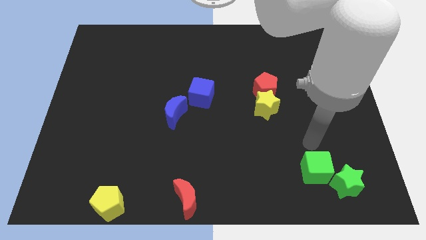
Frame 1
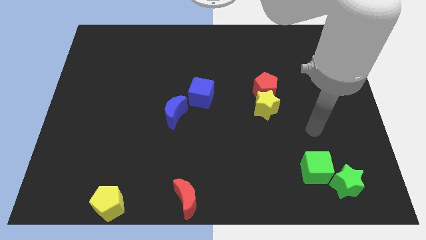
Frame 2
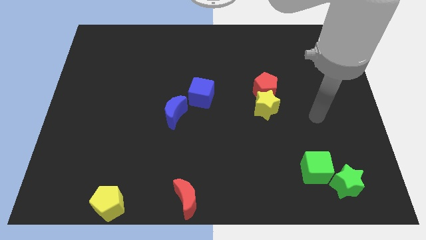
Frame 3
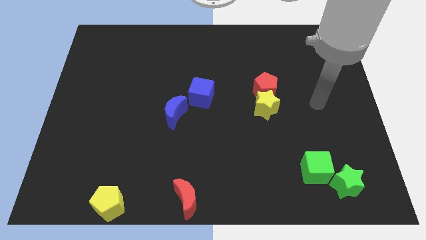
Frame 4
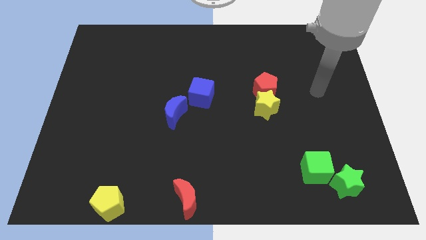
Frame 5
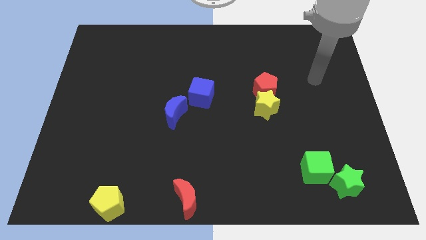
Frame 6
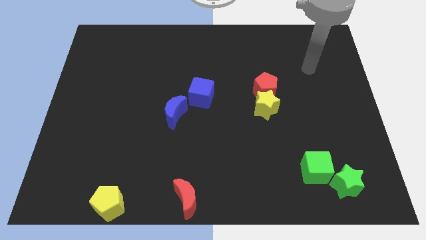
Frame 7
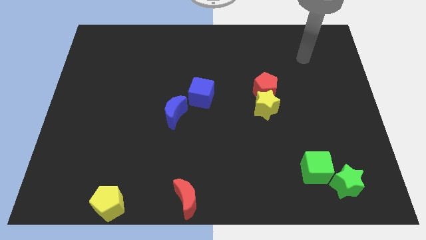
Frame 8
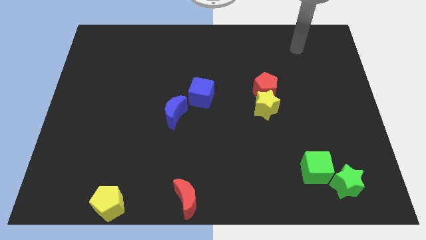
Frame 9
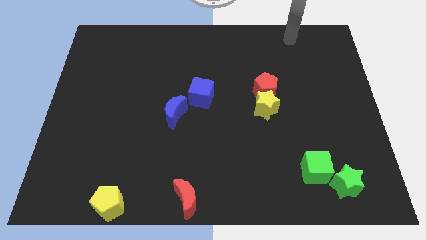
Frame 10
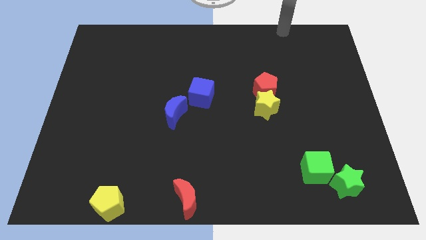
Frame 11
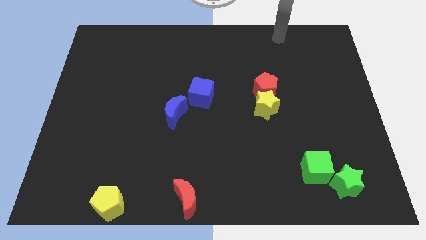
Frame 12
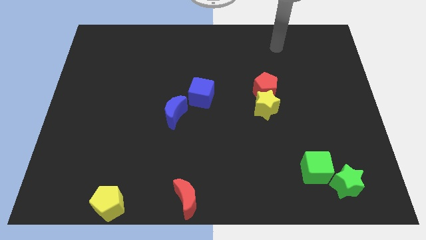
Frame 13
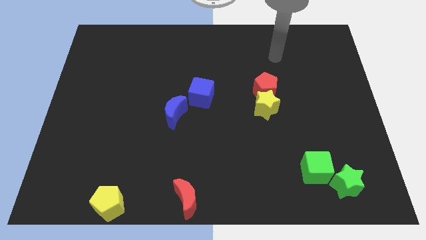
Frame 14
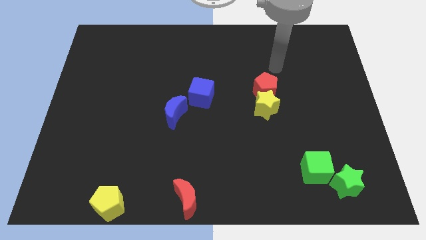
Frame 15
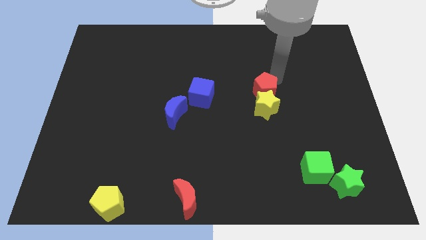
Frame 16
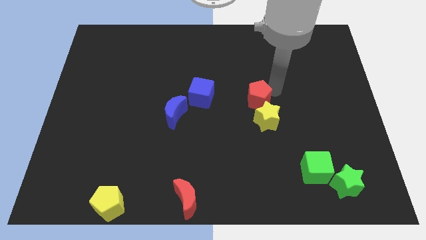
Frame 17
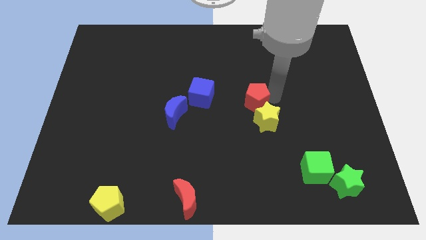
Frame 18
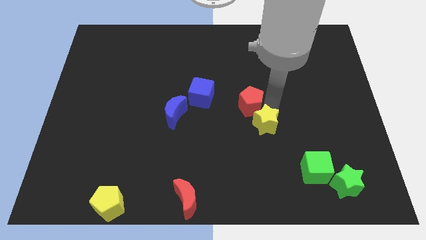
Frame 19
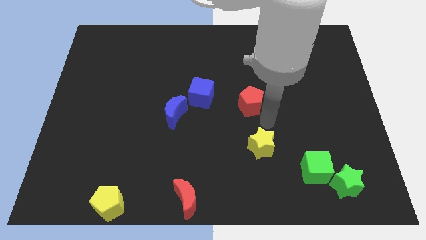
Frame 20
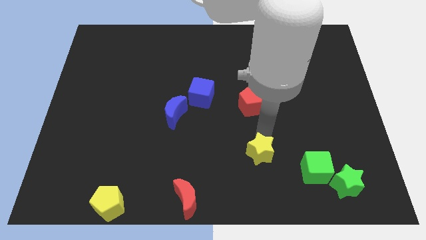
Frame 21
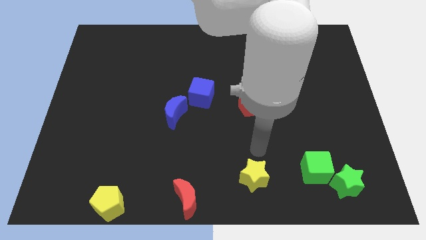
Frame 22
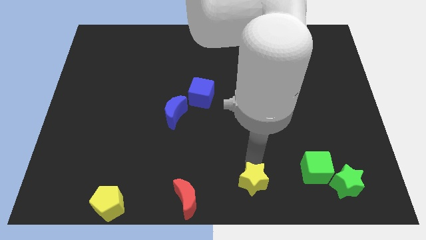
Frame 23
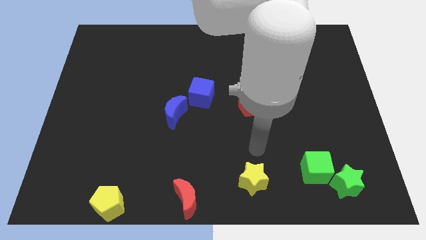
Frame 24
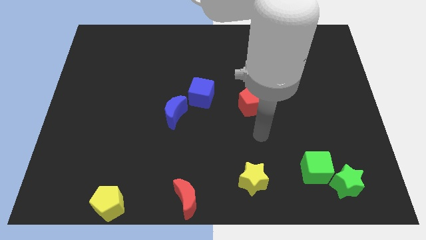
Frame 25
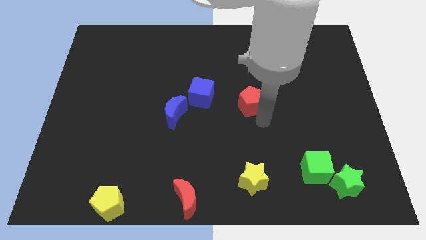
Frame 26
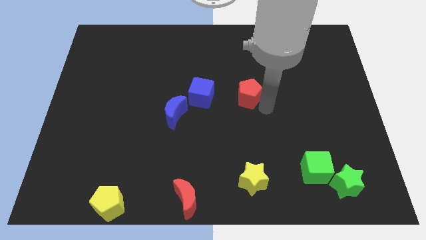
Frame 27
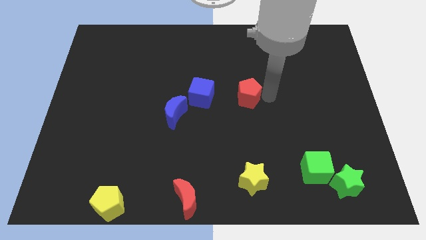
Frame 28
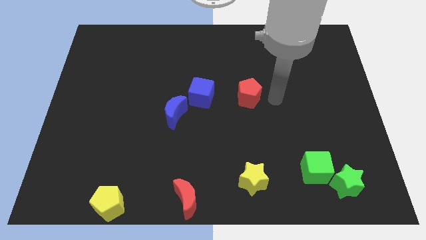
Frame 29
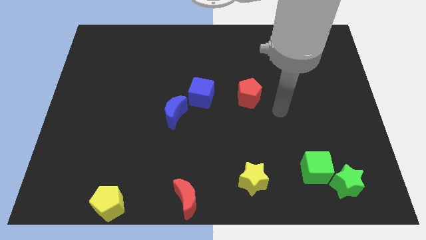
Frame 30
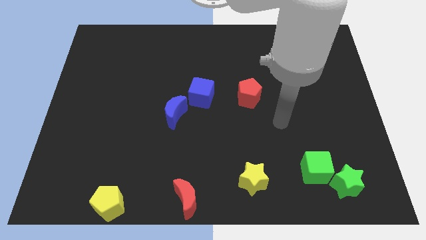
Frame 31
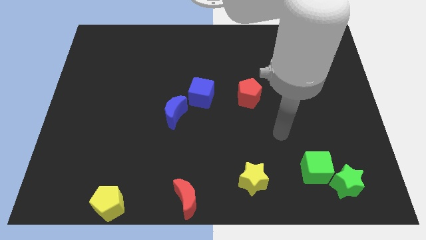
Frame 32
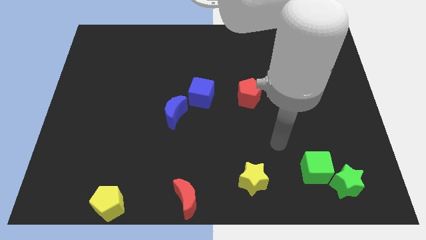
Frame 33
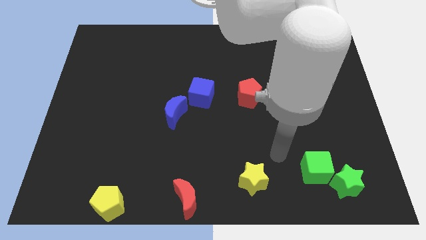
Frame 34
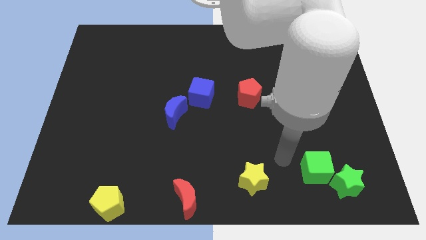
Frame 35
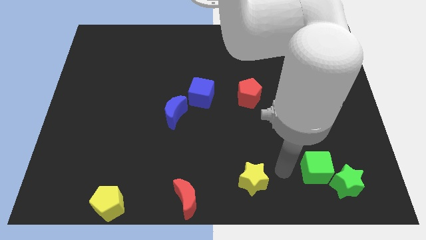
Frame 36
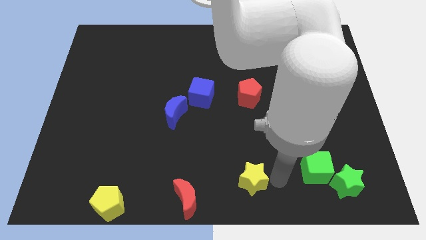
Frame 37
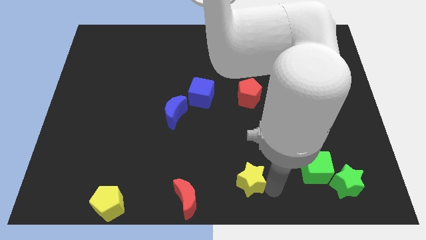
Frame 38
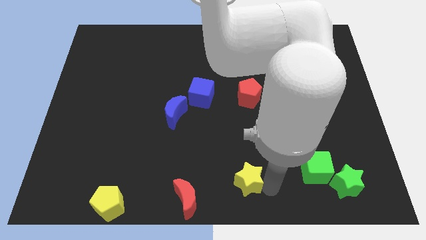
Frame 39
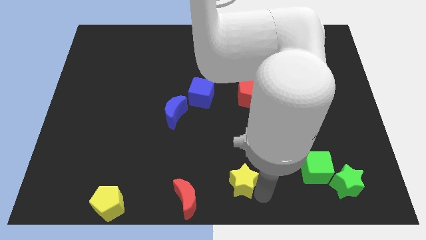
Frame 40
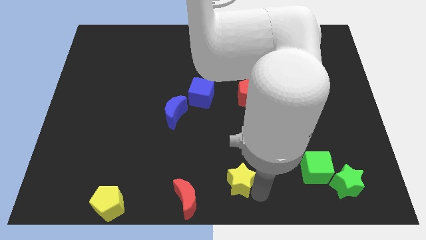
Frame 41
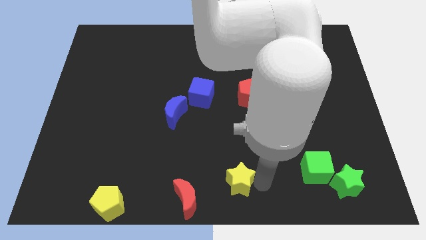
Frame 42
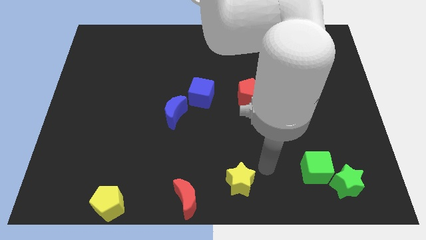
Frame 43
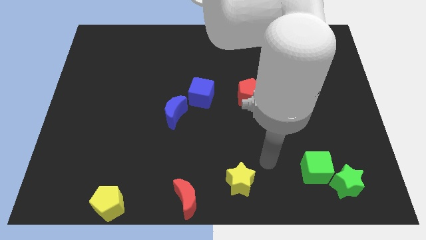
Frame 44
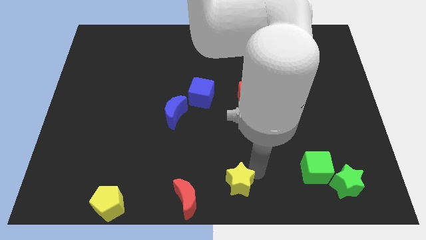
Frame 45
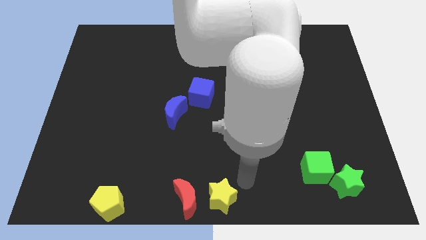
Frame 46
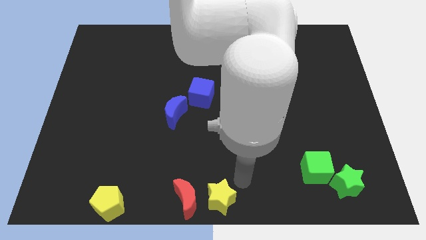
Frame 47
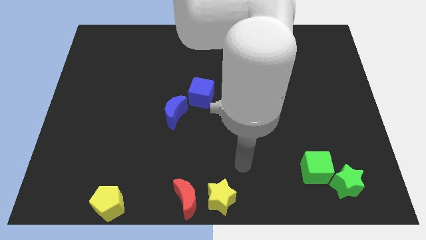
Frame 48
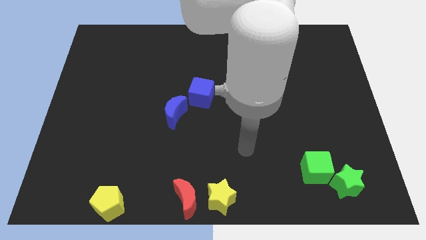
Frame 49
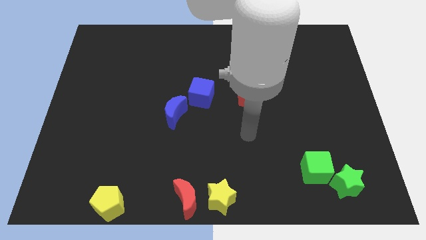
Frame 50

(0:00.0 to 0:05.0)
place the yellow star at the bottom center of the board

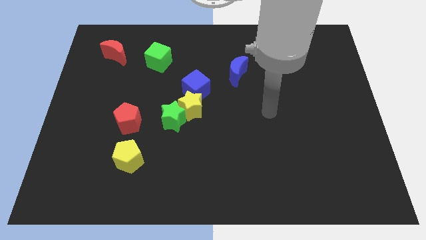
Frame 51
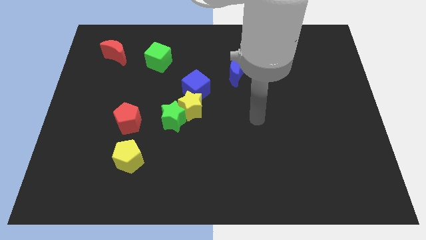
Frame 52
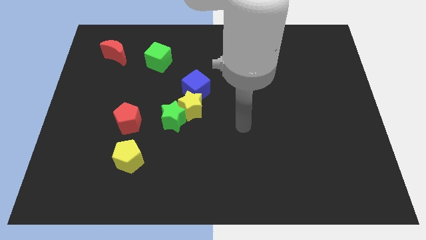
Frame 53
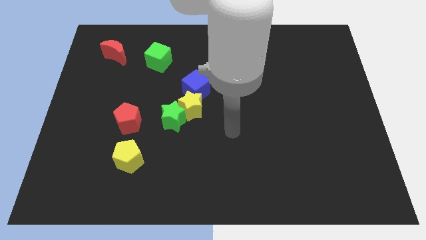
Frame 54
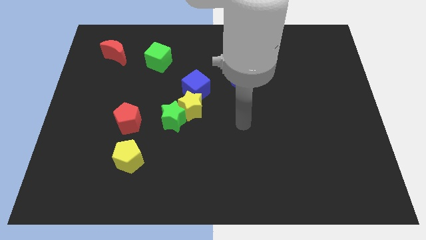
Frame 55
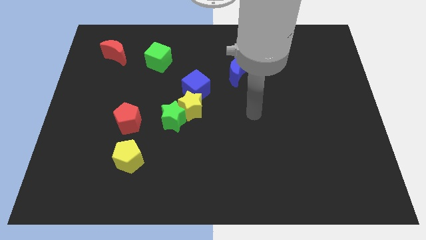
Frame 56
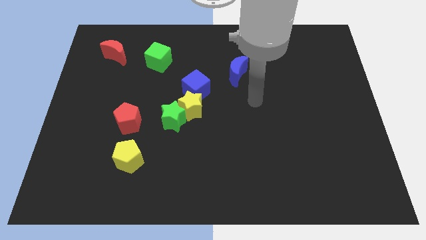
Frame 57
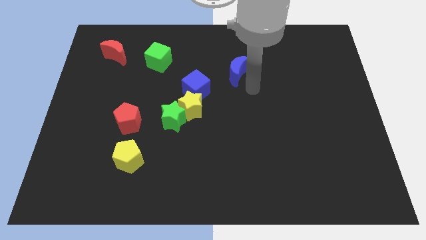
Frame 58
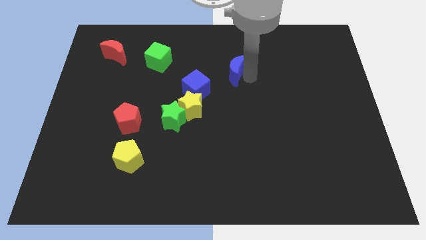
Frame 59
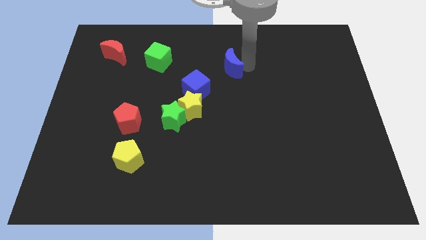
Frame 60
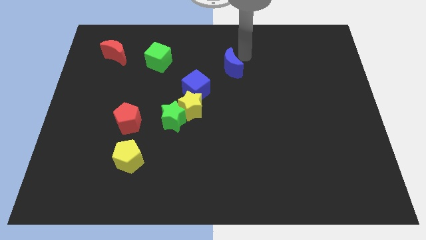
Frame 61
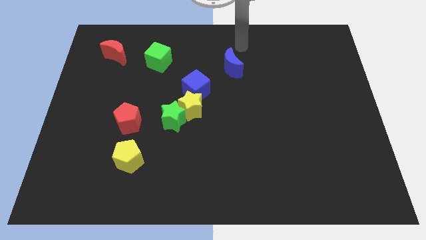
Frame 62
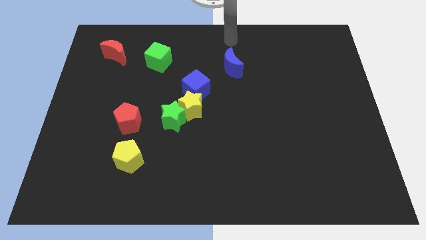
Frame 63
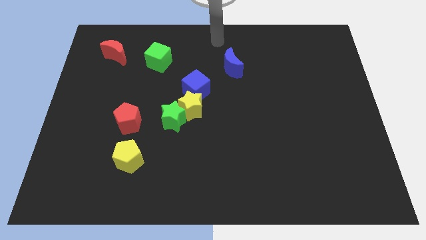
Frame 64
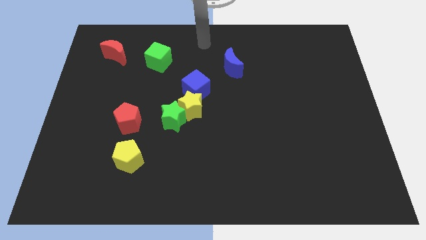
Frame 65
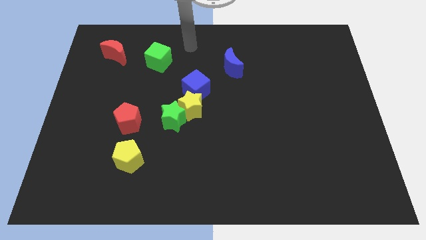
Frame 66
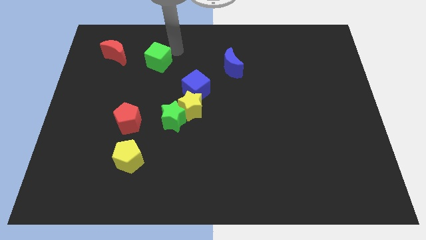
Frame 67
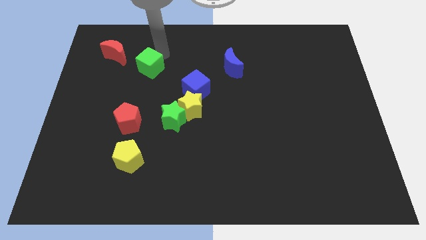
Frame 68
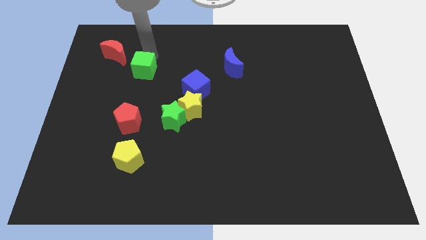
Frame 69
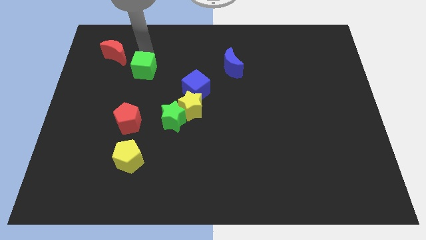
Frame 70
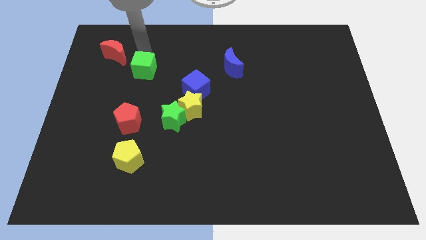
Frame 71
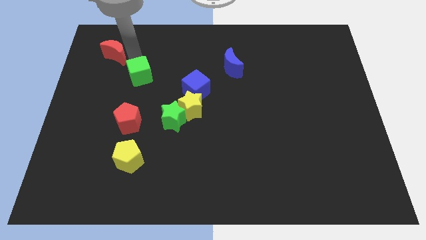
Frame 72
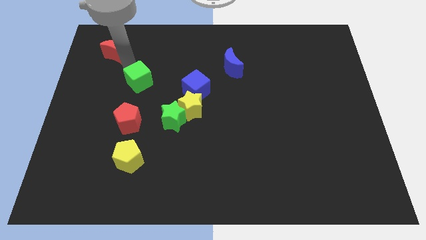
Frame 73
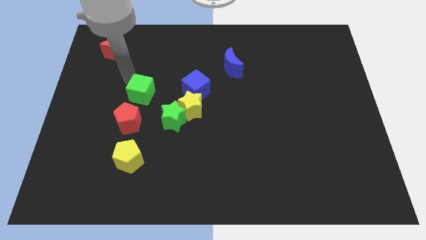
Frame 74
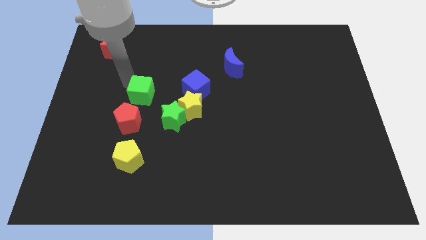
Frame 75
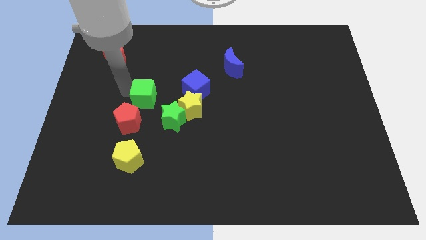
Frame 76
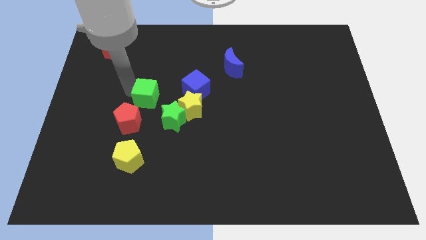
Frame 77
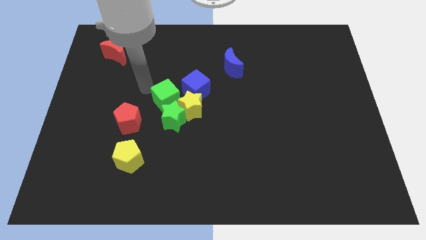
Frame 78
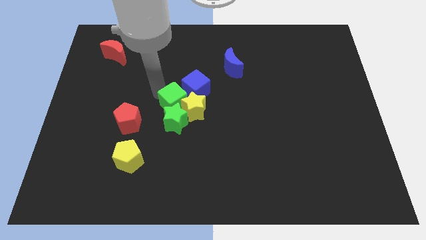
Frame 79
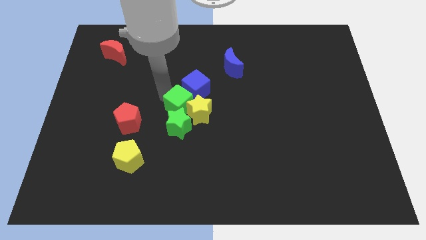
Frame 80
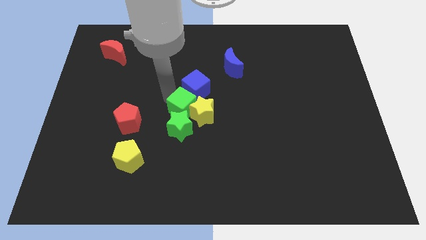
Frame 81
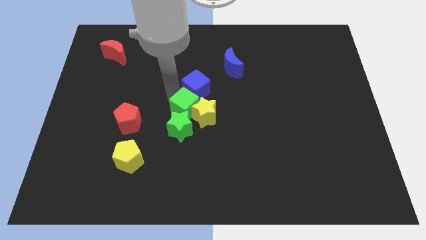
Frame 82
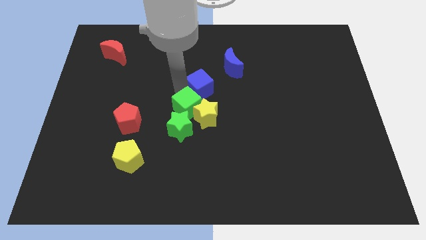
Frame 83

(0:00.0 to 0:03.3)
push the green cube into the yellow star

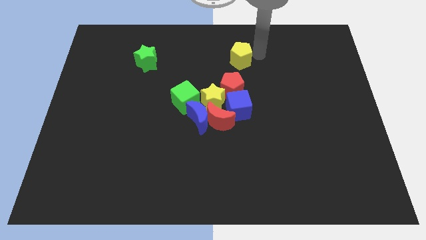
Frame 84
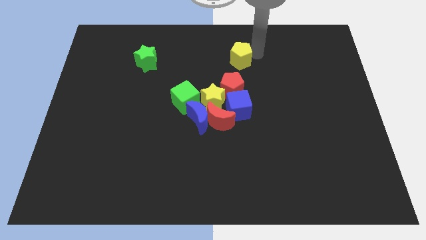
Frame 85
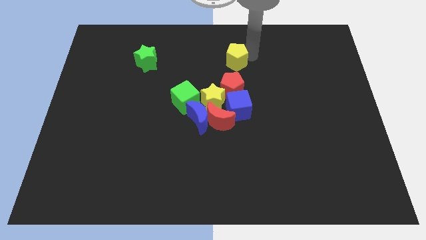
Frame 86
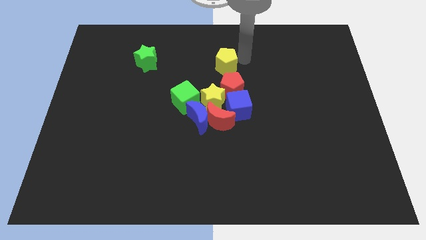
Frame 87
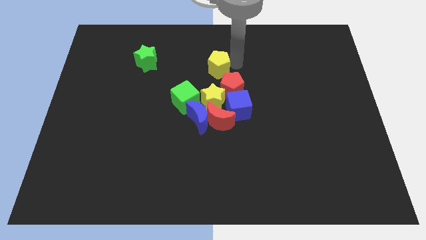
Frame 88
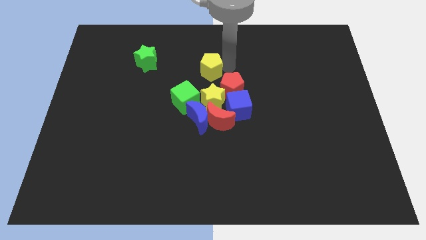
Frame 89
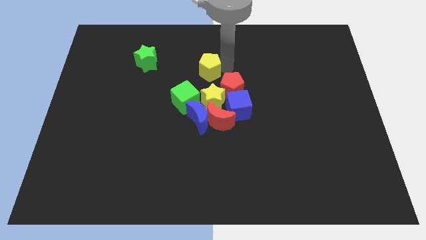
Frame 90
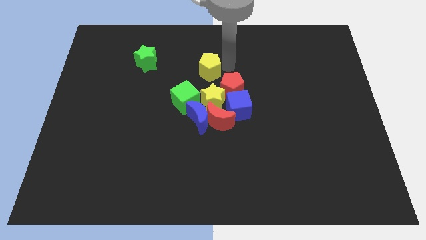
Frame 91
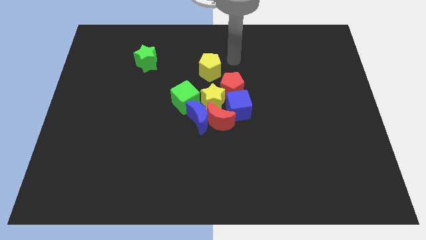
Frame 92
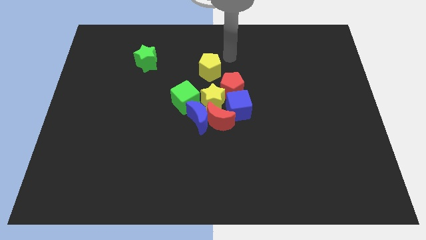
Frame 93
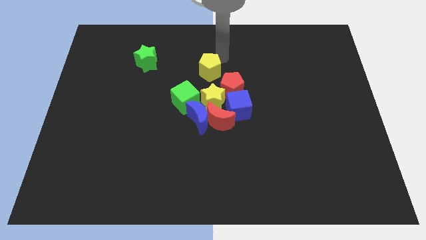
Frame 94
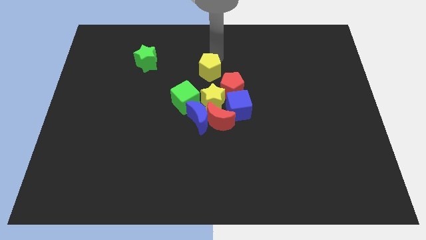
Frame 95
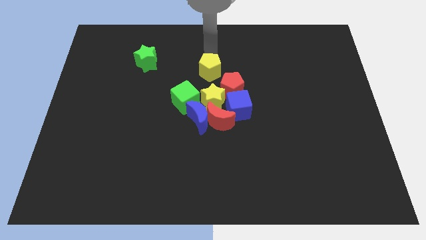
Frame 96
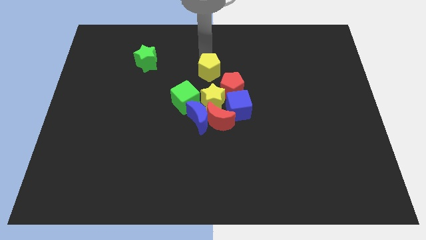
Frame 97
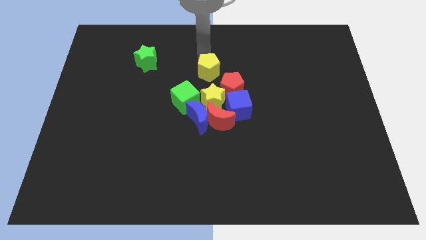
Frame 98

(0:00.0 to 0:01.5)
place the yellow pentagon above the yellow star
